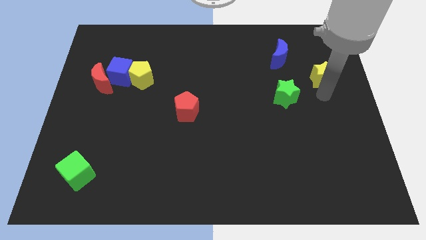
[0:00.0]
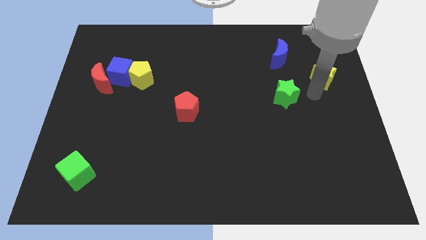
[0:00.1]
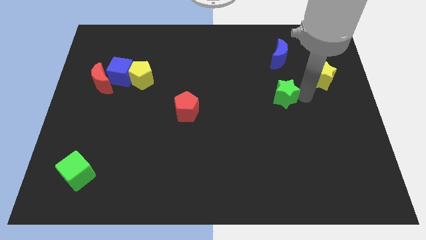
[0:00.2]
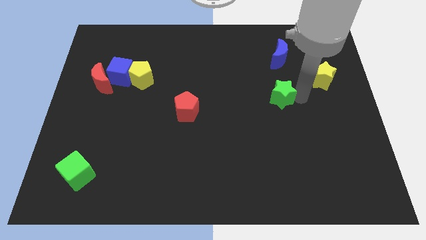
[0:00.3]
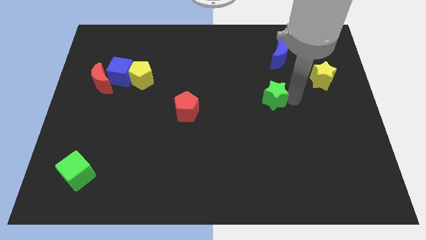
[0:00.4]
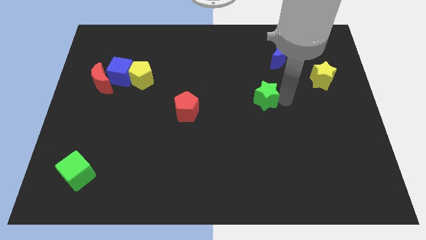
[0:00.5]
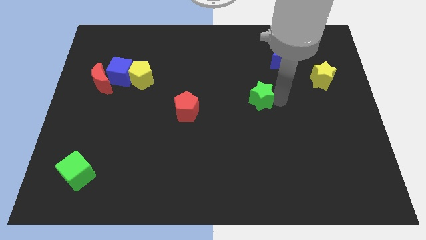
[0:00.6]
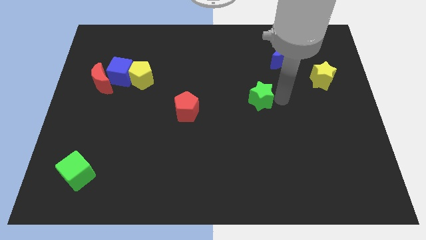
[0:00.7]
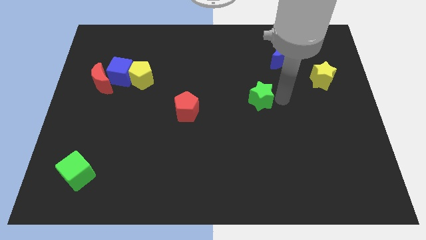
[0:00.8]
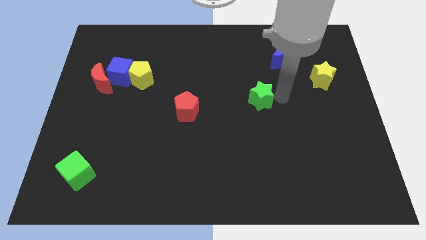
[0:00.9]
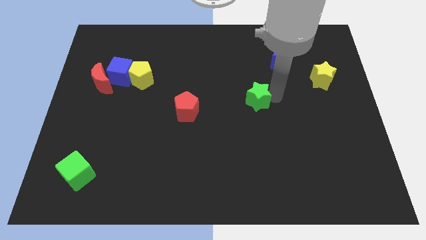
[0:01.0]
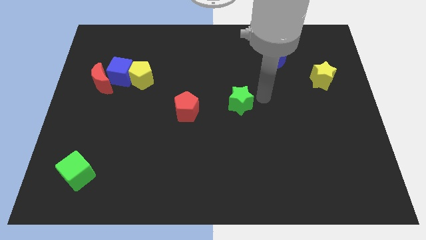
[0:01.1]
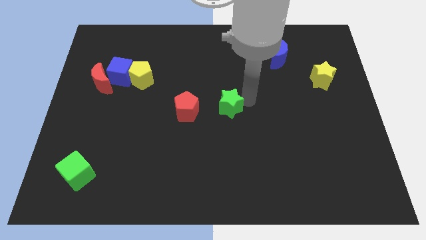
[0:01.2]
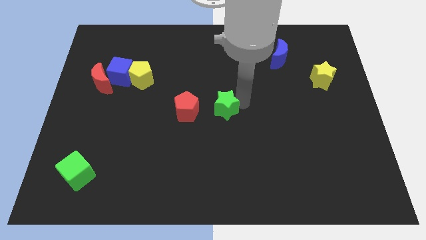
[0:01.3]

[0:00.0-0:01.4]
drag the green star diagonally bottom left to the blue crescent

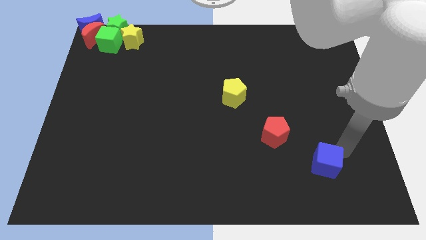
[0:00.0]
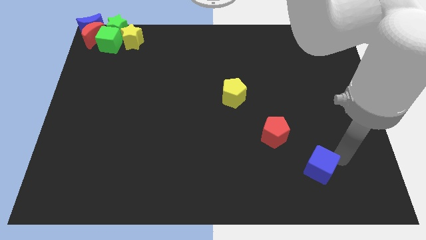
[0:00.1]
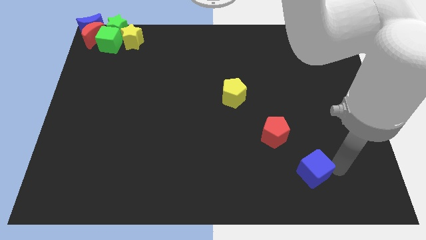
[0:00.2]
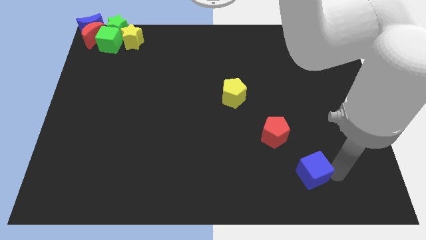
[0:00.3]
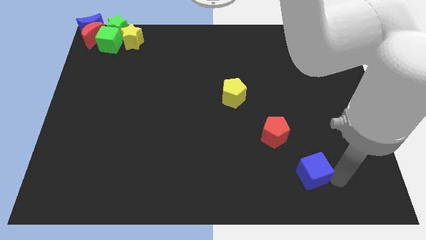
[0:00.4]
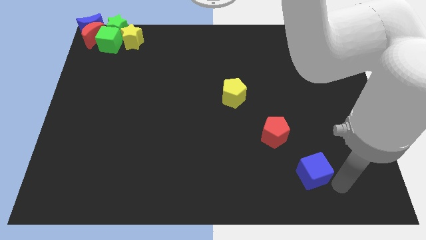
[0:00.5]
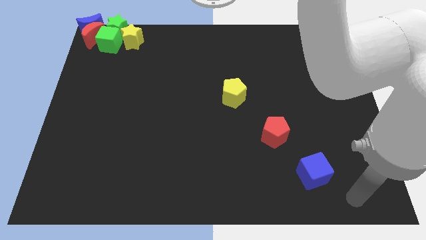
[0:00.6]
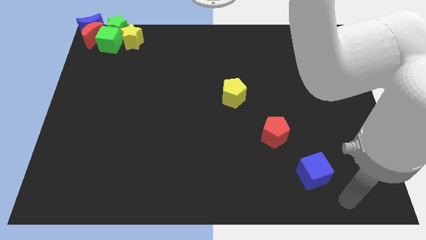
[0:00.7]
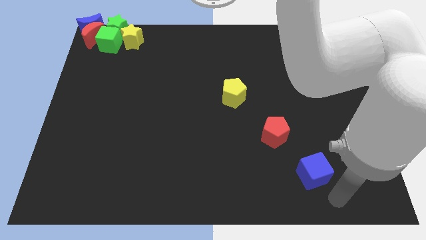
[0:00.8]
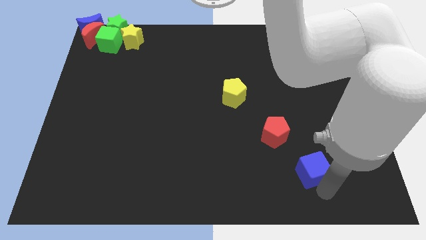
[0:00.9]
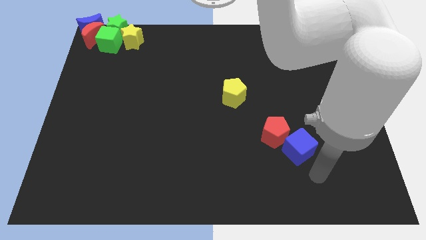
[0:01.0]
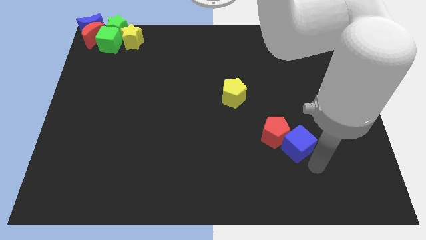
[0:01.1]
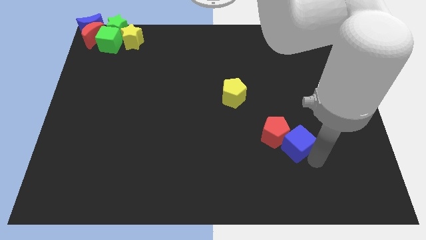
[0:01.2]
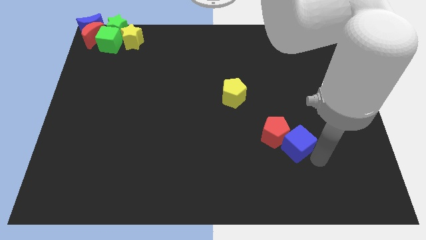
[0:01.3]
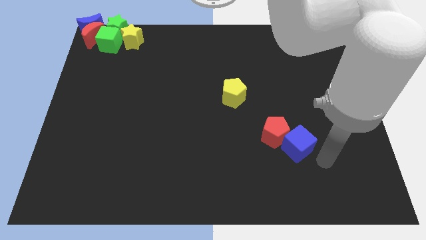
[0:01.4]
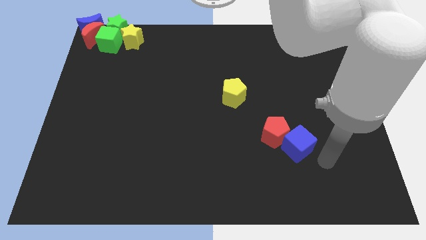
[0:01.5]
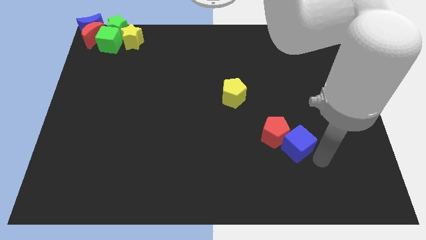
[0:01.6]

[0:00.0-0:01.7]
slide the blue cube into the red pentagon

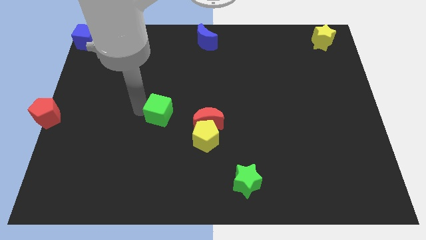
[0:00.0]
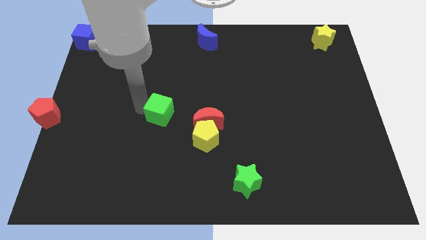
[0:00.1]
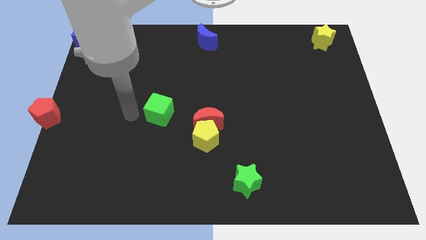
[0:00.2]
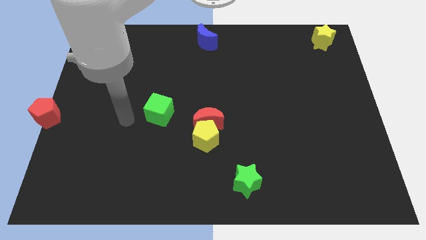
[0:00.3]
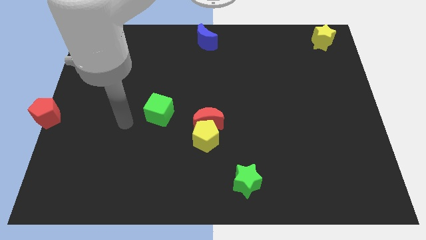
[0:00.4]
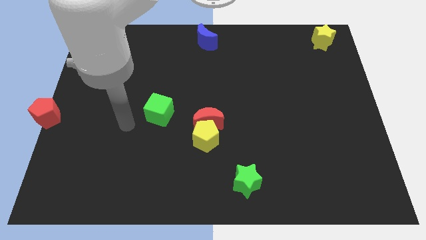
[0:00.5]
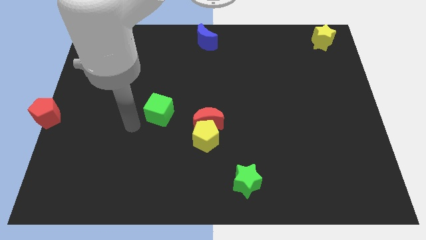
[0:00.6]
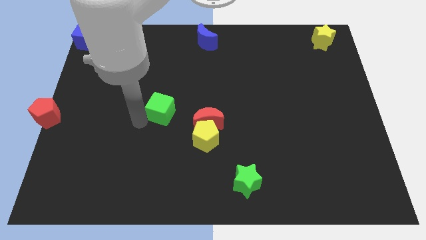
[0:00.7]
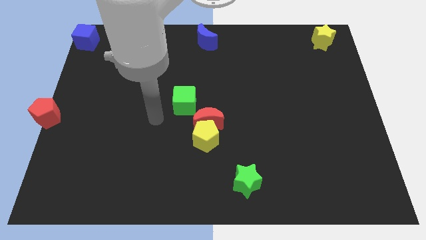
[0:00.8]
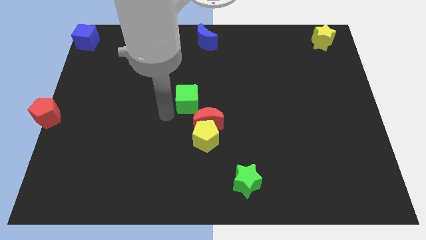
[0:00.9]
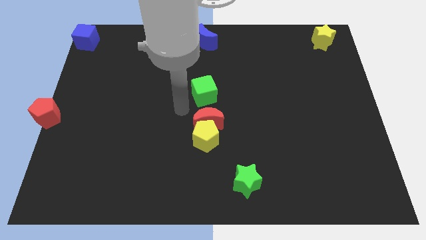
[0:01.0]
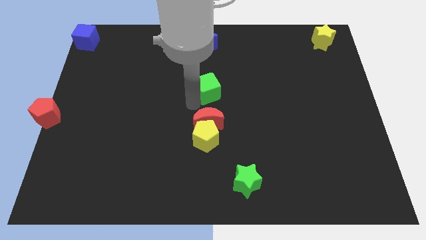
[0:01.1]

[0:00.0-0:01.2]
place the green cube above the red moon

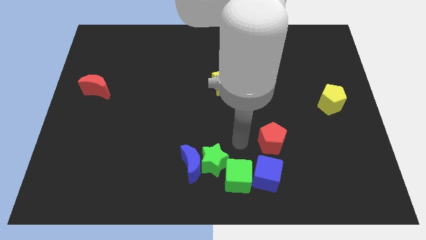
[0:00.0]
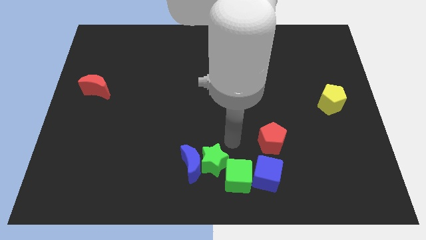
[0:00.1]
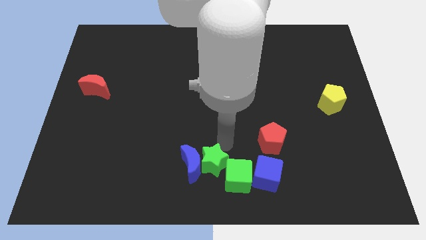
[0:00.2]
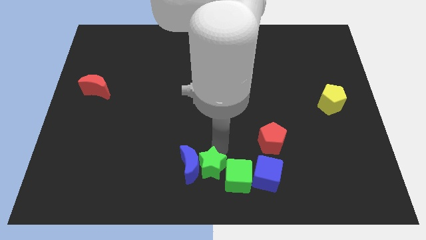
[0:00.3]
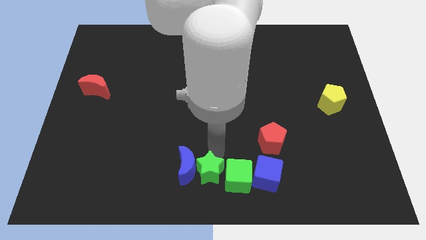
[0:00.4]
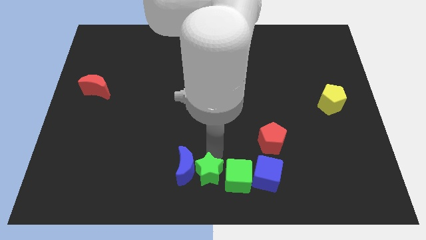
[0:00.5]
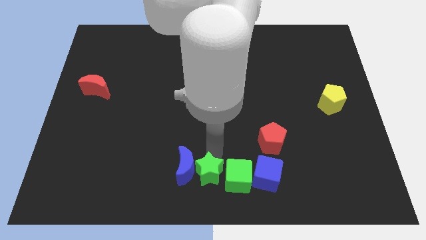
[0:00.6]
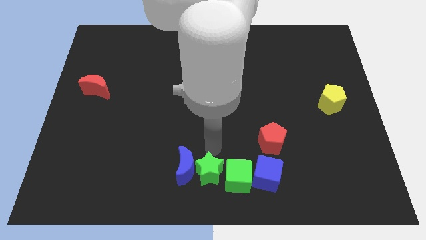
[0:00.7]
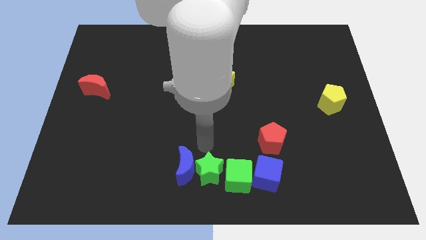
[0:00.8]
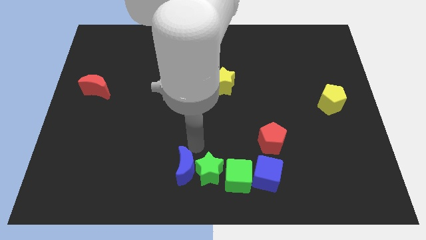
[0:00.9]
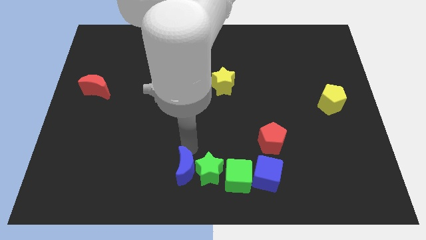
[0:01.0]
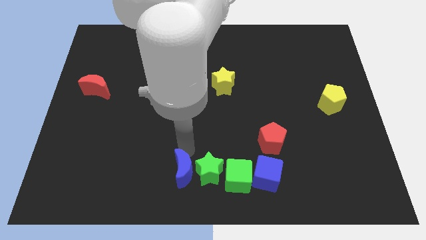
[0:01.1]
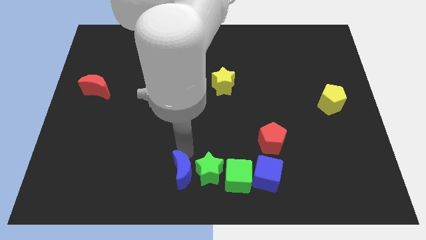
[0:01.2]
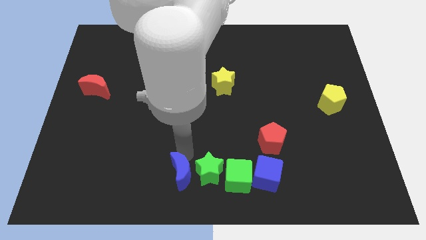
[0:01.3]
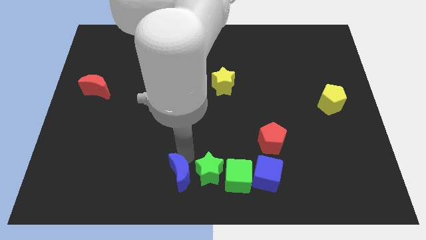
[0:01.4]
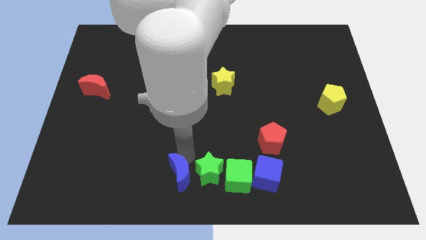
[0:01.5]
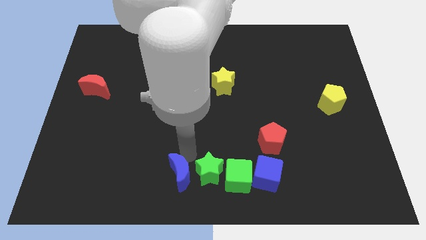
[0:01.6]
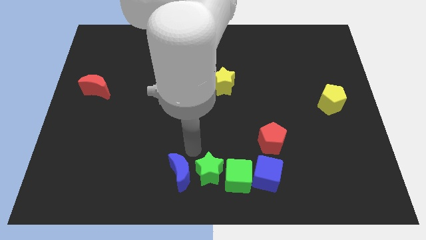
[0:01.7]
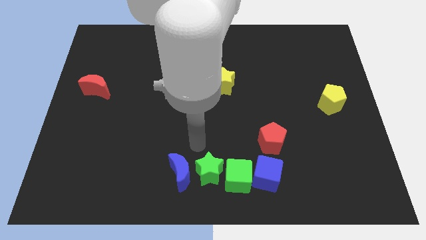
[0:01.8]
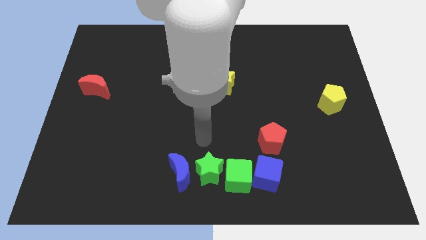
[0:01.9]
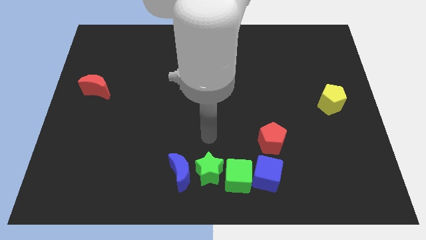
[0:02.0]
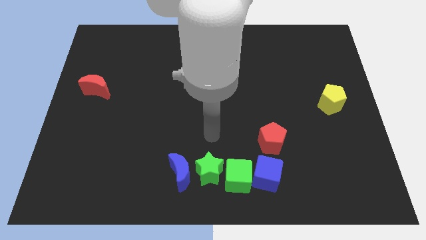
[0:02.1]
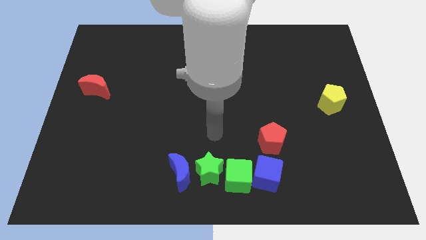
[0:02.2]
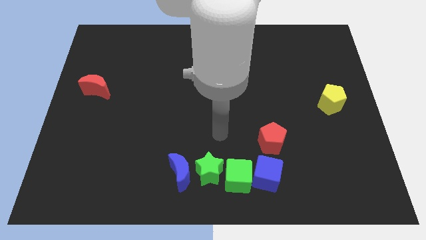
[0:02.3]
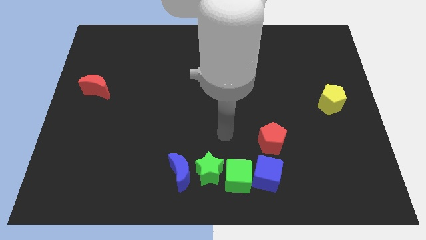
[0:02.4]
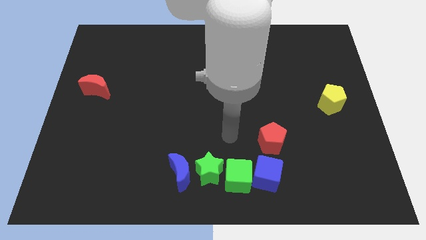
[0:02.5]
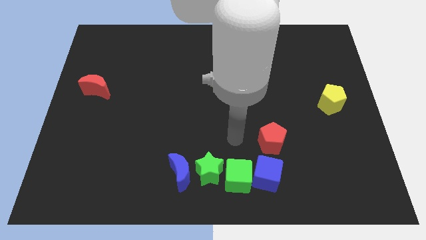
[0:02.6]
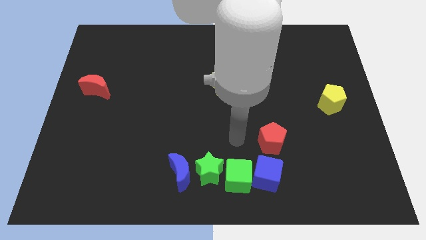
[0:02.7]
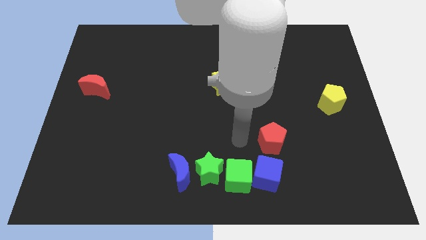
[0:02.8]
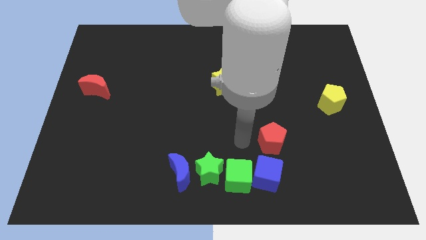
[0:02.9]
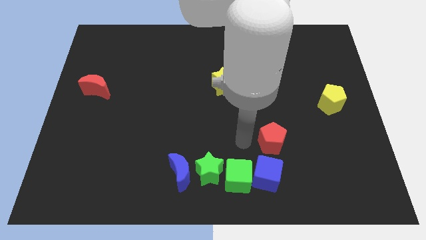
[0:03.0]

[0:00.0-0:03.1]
adjust the blue moon and green in a line at the bottom

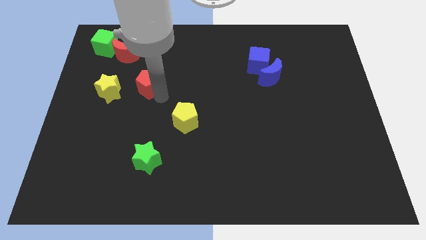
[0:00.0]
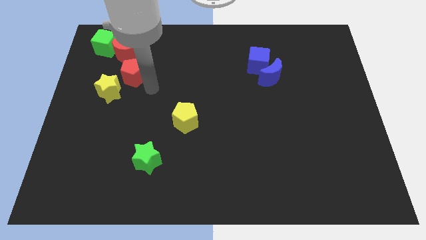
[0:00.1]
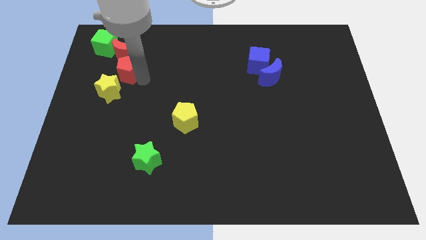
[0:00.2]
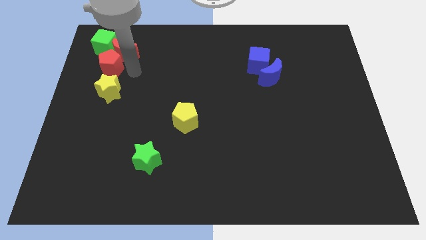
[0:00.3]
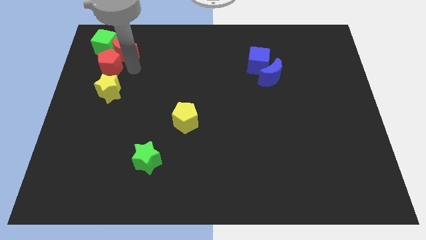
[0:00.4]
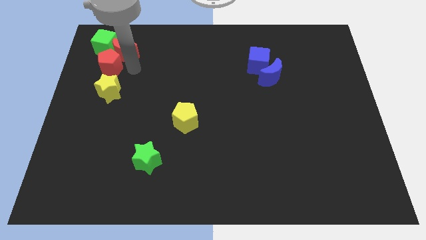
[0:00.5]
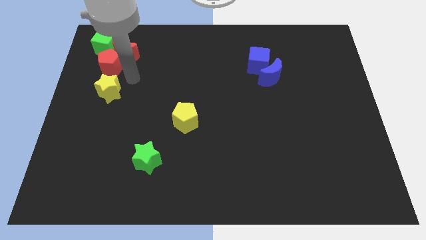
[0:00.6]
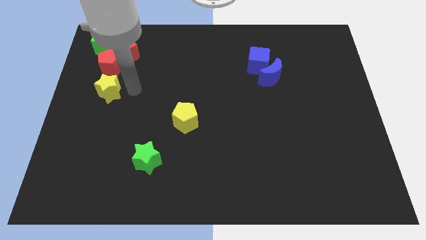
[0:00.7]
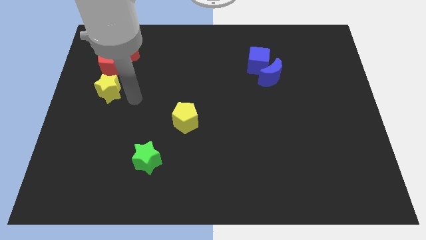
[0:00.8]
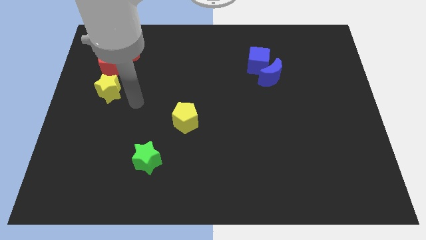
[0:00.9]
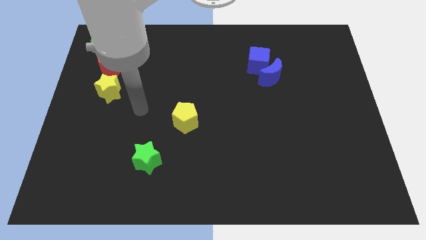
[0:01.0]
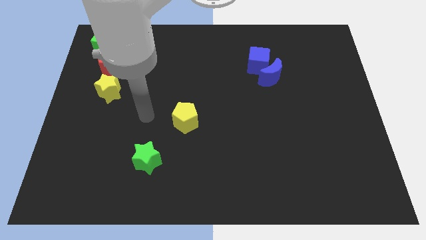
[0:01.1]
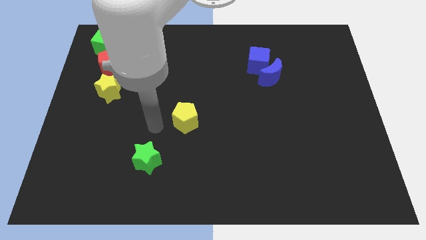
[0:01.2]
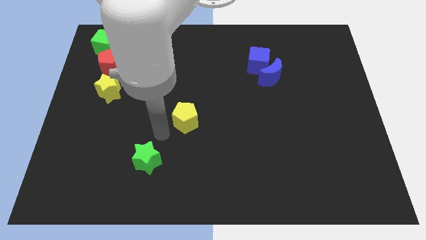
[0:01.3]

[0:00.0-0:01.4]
push the red pentagon towards top left side
